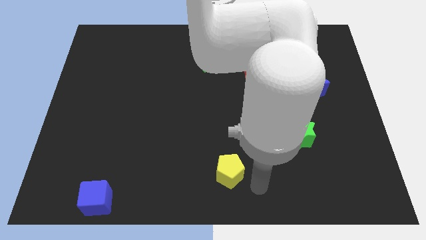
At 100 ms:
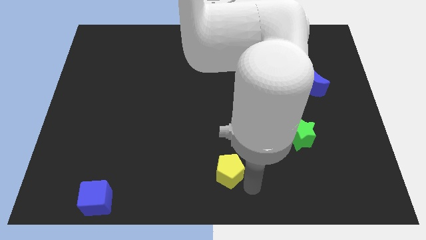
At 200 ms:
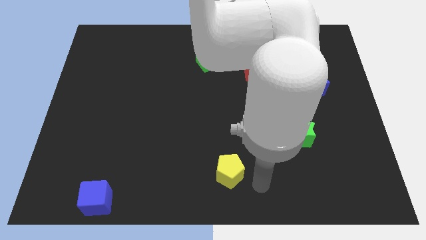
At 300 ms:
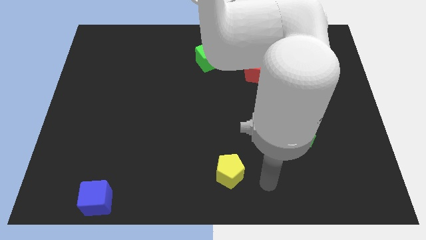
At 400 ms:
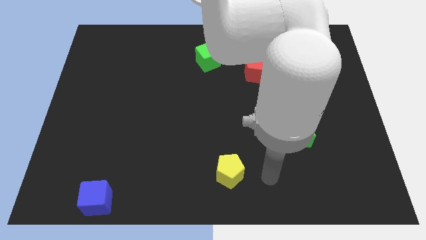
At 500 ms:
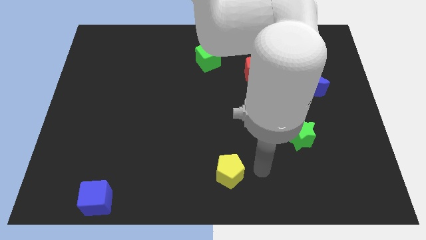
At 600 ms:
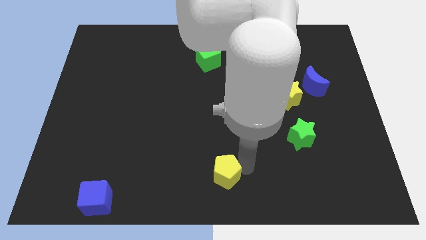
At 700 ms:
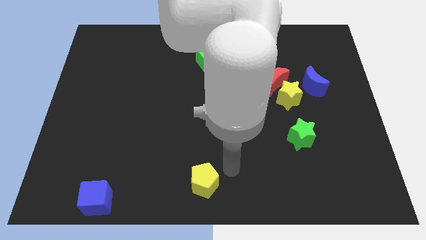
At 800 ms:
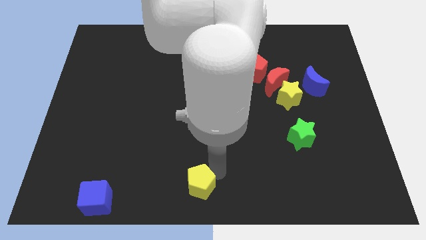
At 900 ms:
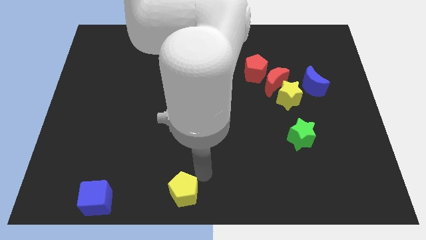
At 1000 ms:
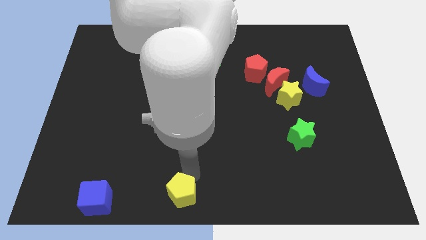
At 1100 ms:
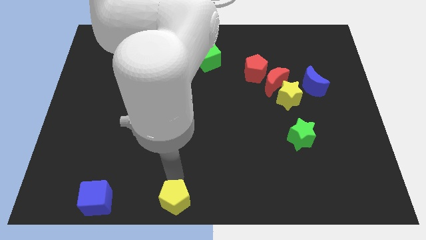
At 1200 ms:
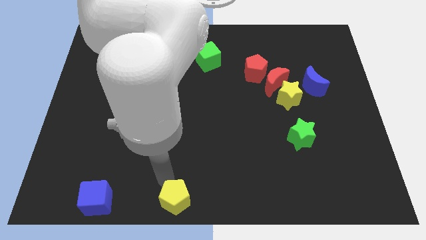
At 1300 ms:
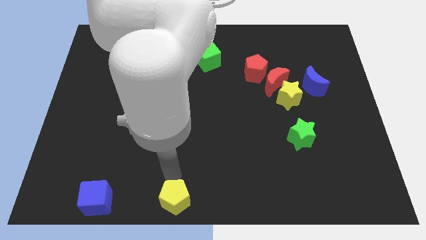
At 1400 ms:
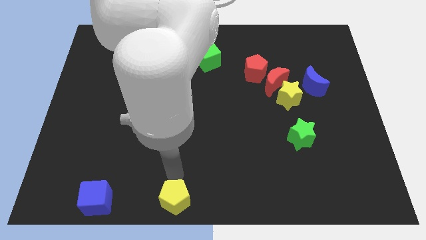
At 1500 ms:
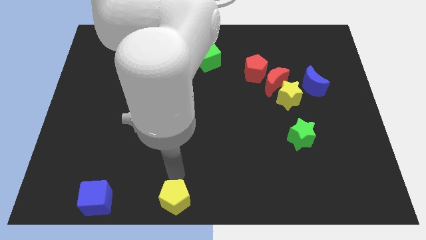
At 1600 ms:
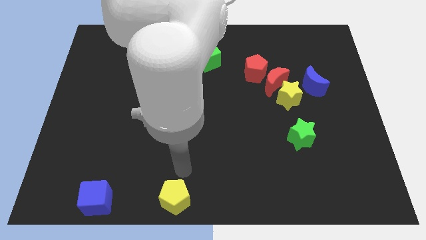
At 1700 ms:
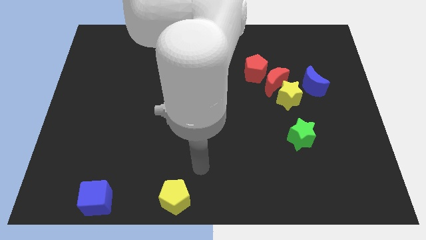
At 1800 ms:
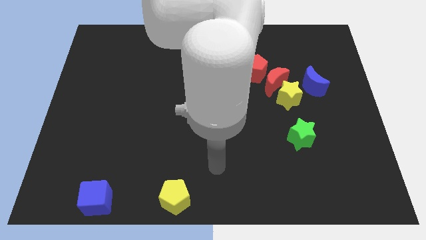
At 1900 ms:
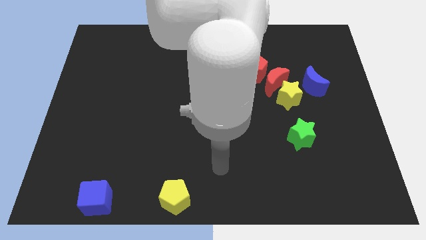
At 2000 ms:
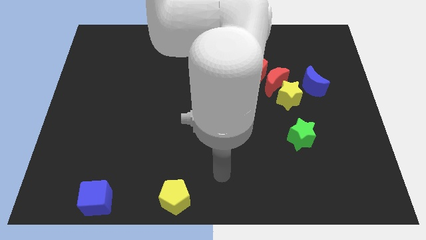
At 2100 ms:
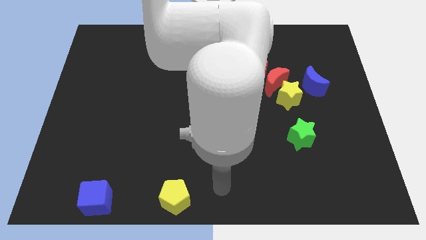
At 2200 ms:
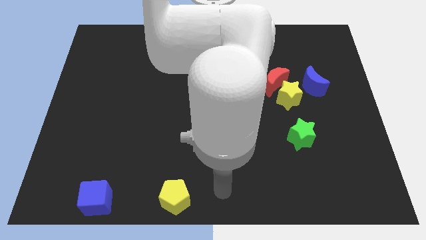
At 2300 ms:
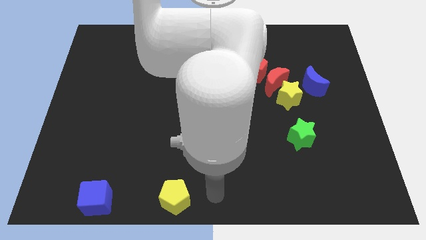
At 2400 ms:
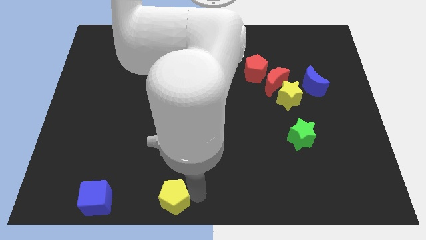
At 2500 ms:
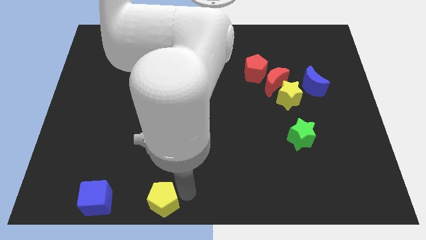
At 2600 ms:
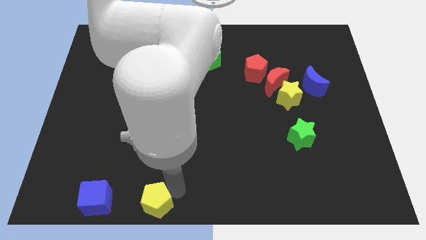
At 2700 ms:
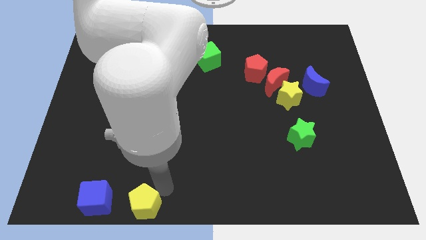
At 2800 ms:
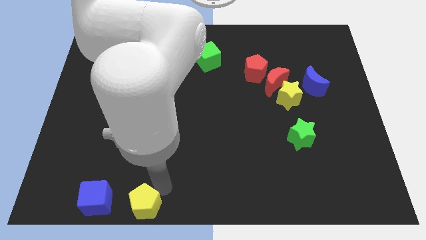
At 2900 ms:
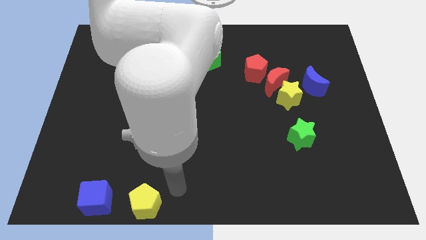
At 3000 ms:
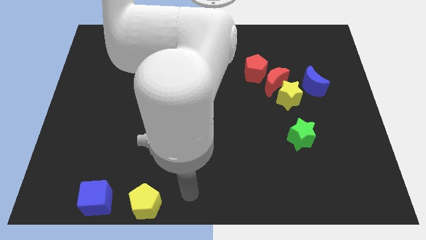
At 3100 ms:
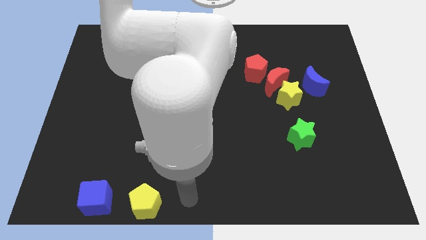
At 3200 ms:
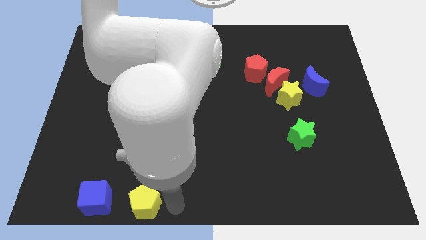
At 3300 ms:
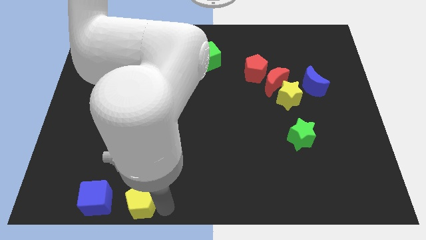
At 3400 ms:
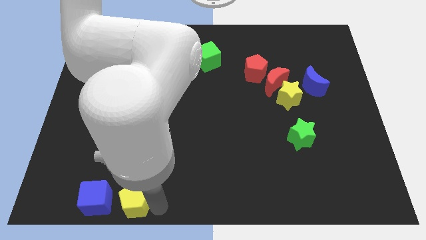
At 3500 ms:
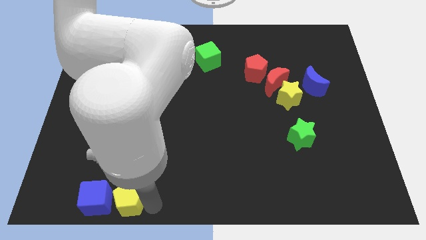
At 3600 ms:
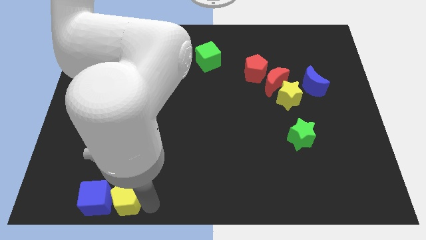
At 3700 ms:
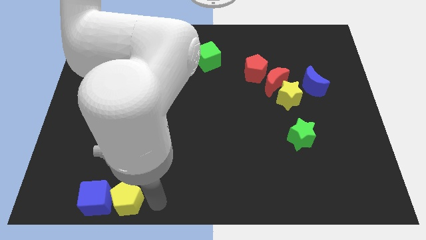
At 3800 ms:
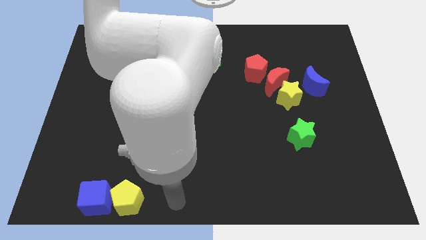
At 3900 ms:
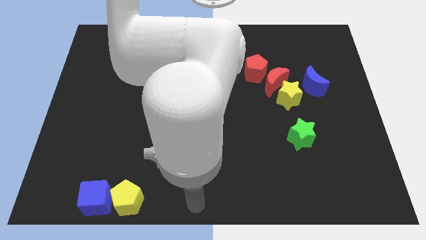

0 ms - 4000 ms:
place yellow pentagon to the right of the blue cube

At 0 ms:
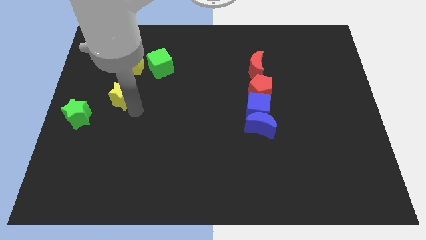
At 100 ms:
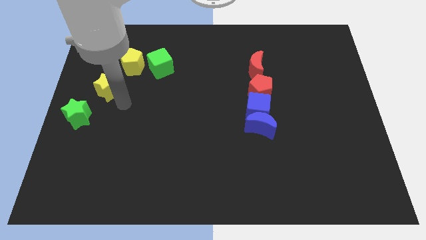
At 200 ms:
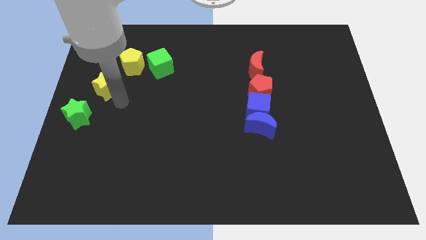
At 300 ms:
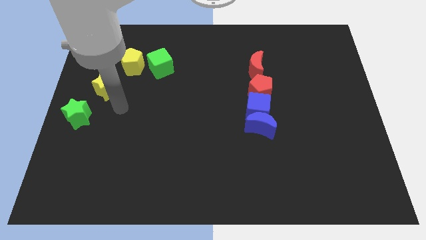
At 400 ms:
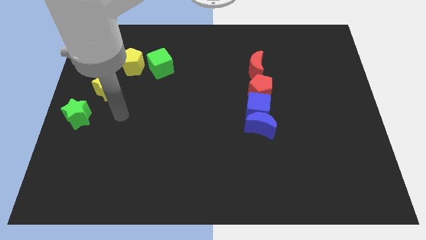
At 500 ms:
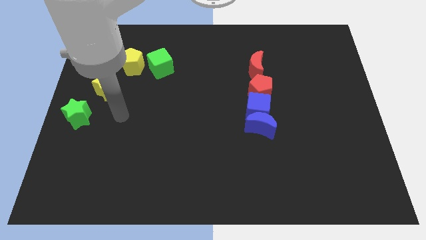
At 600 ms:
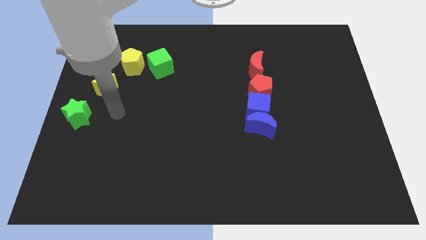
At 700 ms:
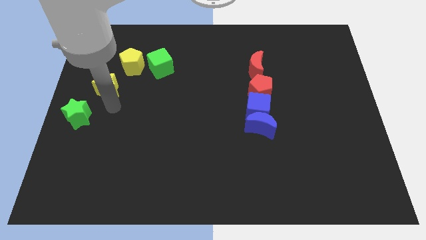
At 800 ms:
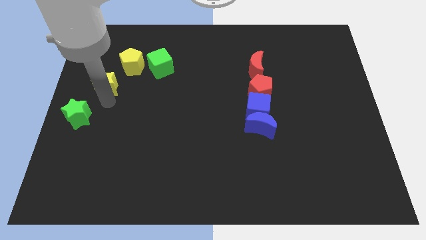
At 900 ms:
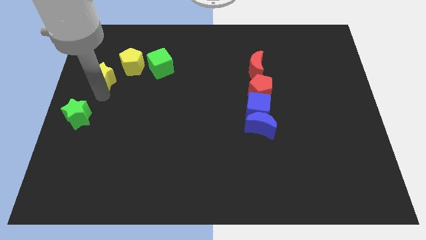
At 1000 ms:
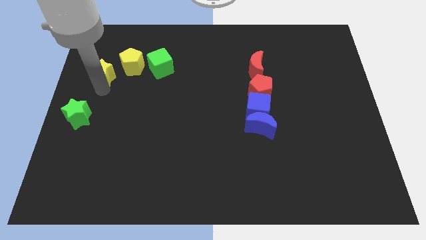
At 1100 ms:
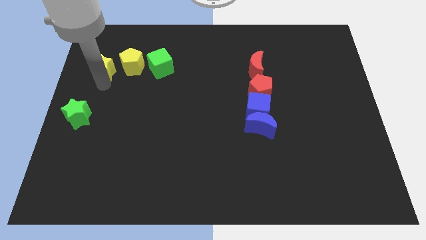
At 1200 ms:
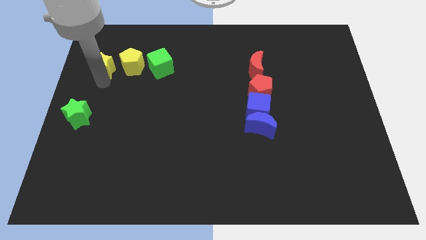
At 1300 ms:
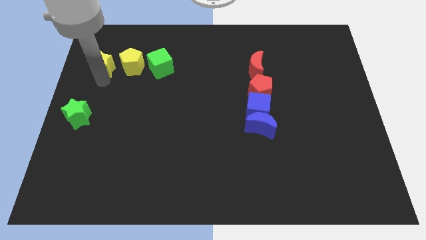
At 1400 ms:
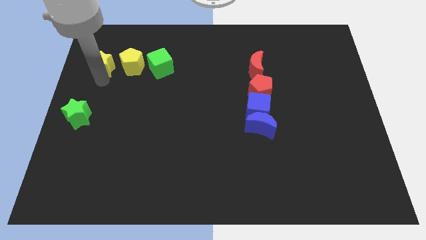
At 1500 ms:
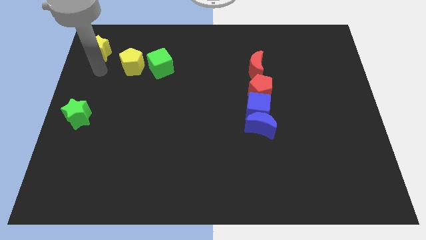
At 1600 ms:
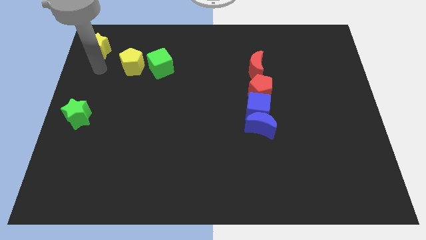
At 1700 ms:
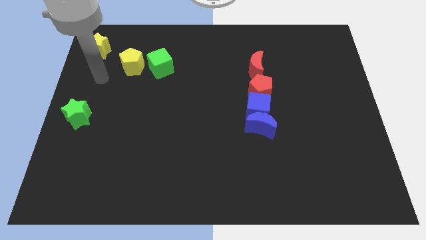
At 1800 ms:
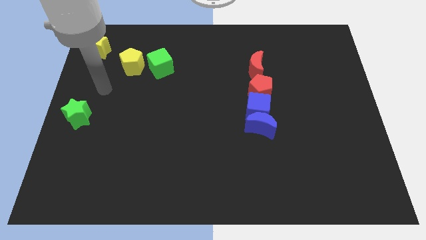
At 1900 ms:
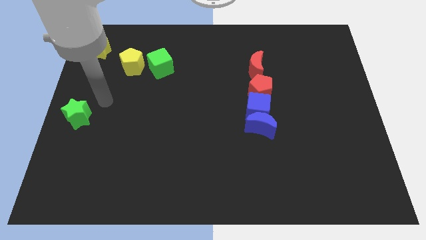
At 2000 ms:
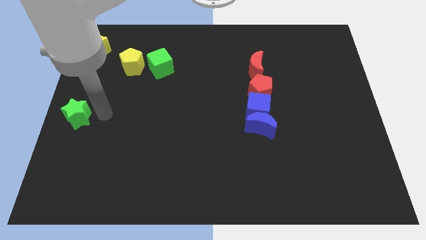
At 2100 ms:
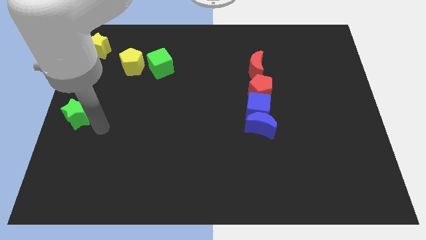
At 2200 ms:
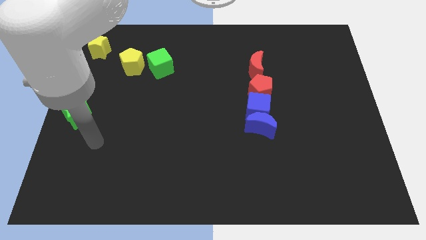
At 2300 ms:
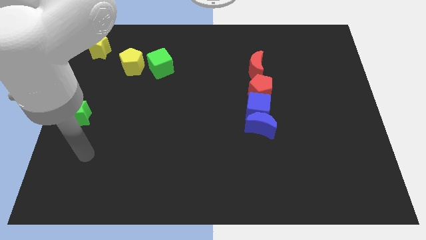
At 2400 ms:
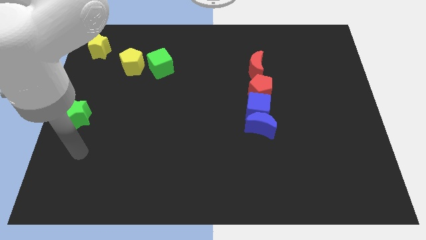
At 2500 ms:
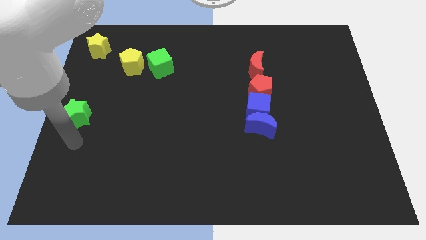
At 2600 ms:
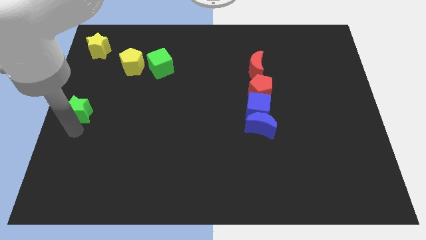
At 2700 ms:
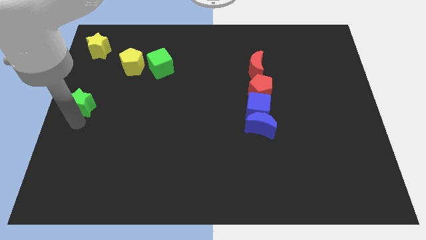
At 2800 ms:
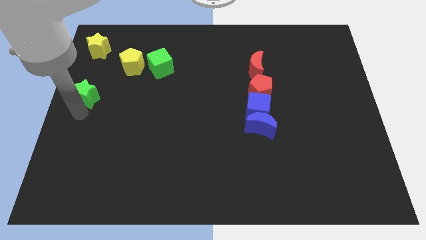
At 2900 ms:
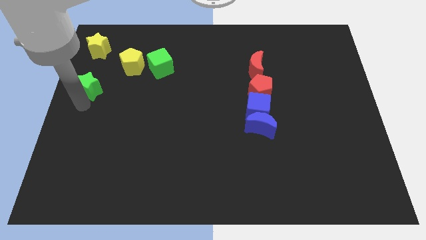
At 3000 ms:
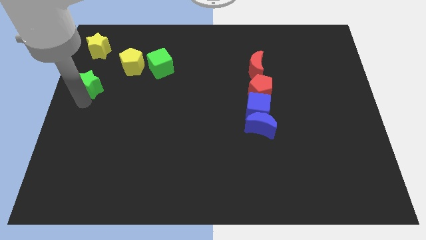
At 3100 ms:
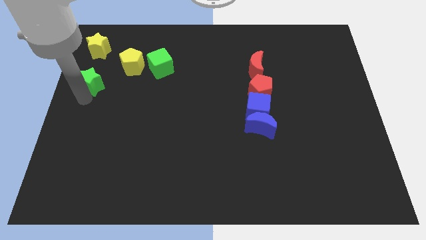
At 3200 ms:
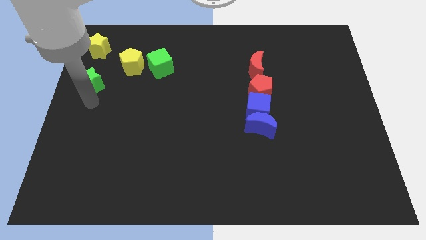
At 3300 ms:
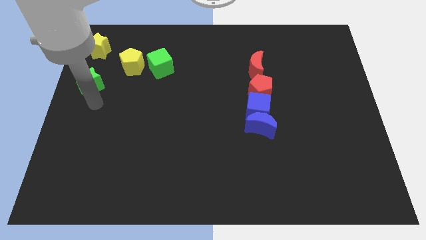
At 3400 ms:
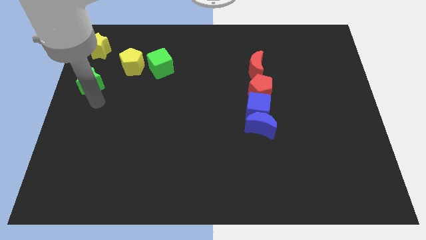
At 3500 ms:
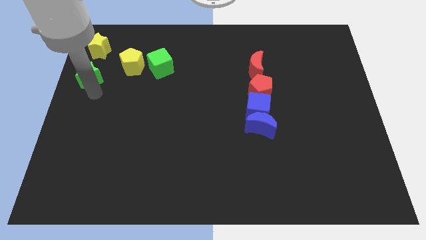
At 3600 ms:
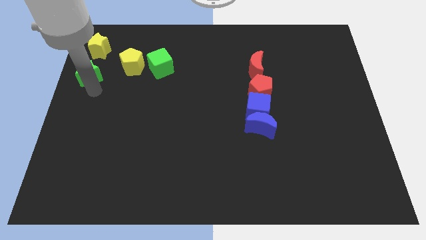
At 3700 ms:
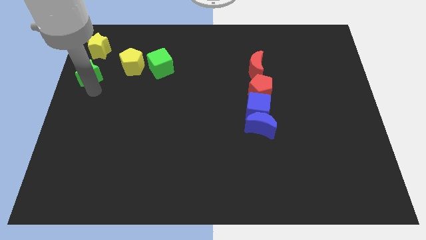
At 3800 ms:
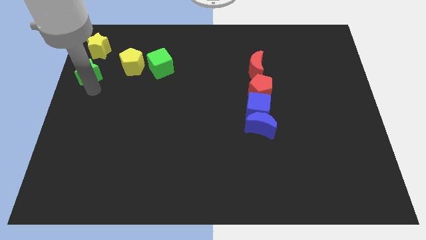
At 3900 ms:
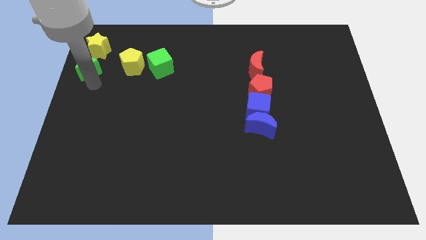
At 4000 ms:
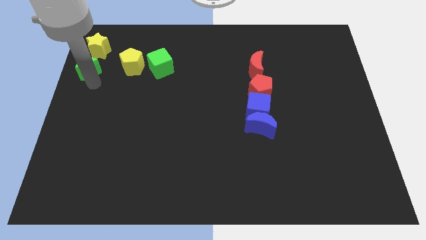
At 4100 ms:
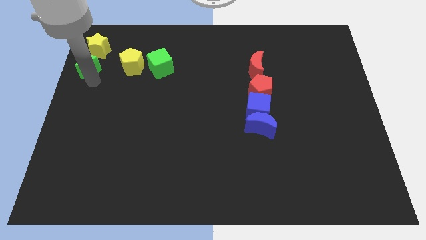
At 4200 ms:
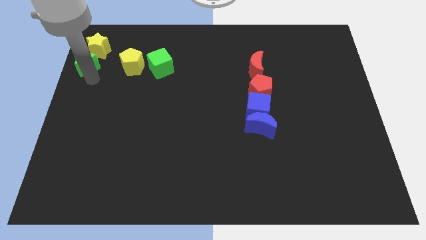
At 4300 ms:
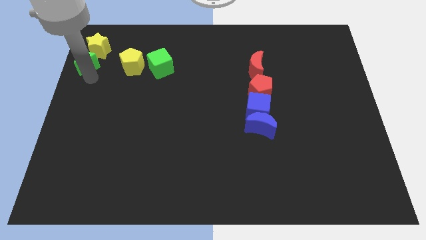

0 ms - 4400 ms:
place the yellow star to the top left of the board

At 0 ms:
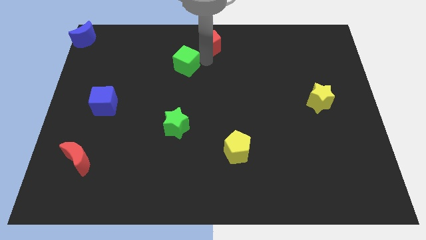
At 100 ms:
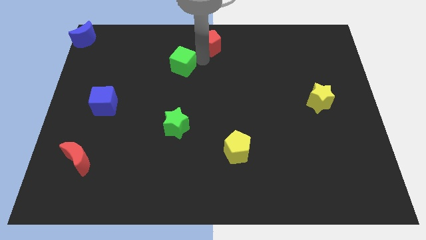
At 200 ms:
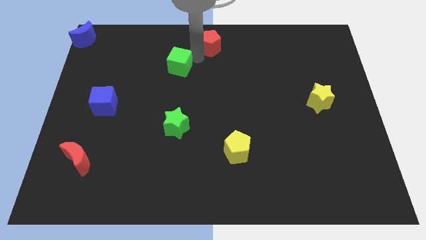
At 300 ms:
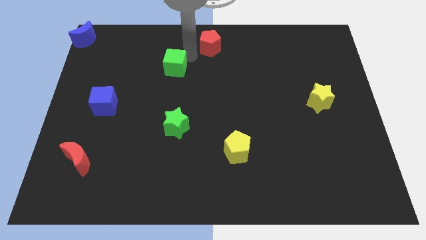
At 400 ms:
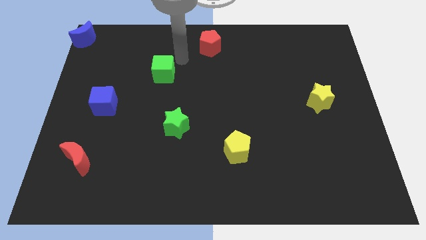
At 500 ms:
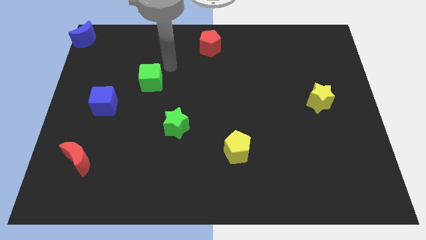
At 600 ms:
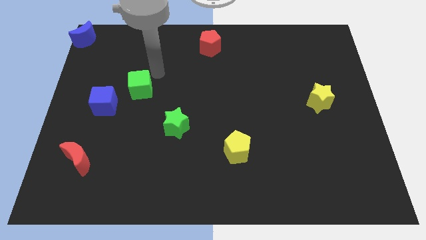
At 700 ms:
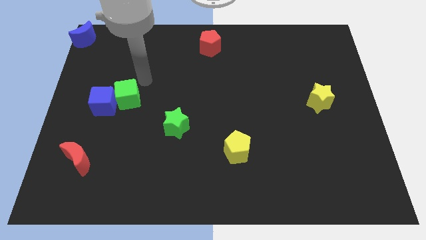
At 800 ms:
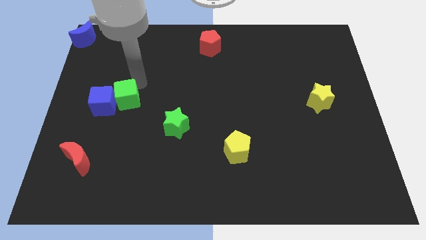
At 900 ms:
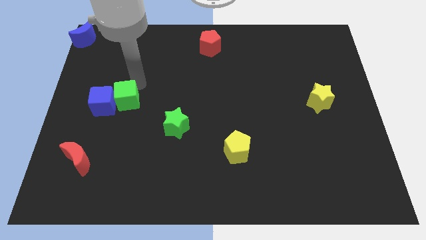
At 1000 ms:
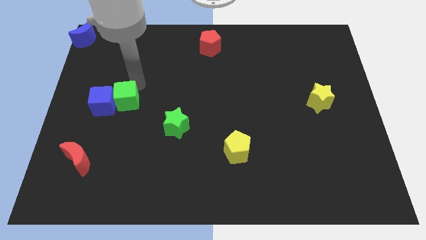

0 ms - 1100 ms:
place green cube to the right of of blue cube
